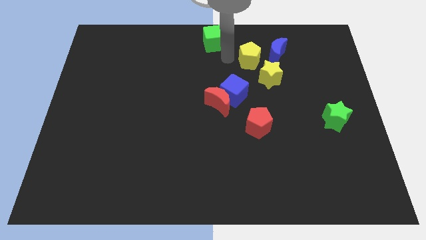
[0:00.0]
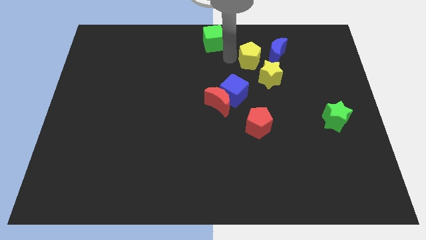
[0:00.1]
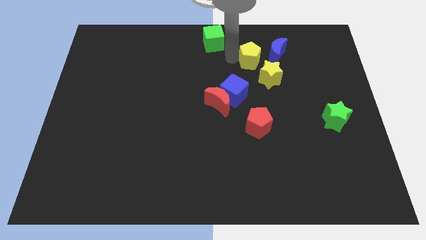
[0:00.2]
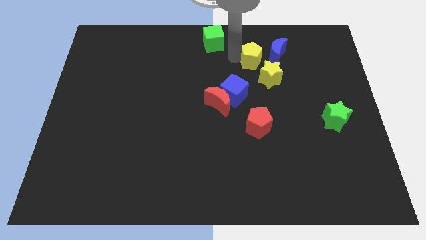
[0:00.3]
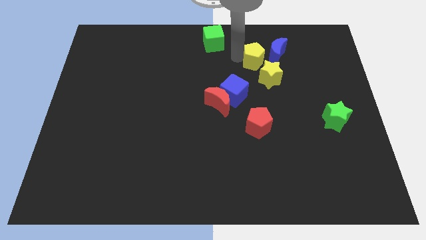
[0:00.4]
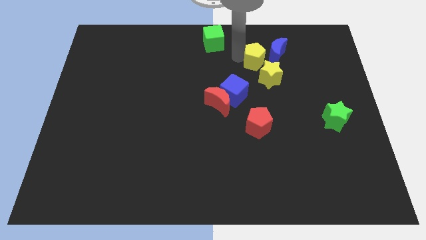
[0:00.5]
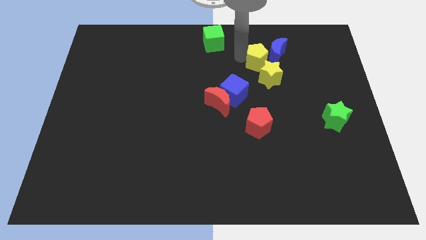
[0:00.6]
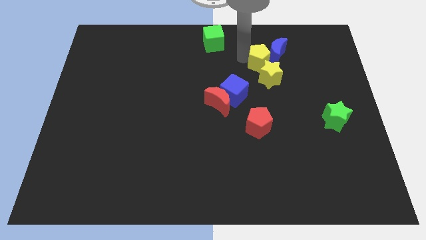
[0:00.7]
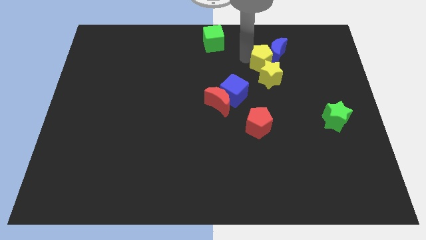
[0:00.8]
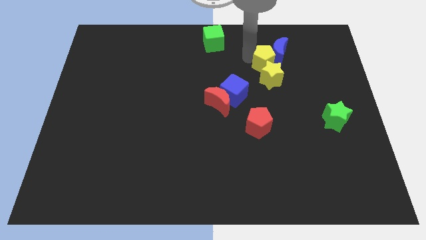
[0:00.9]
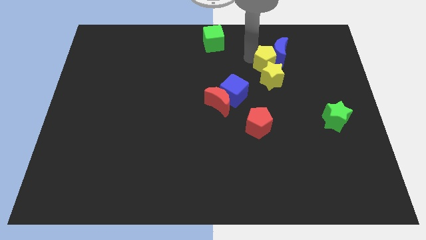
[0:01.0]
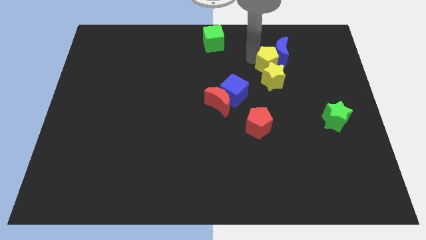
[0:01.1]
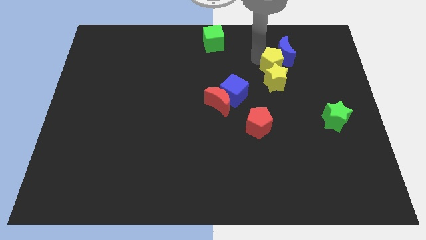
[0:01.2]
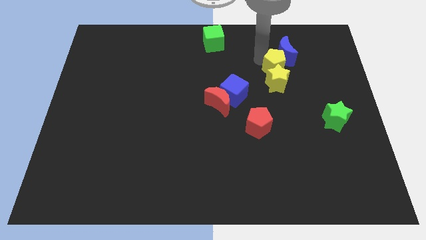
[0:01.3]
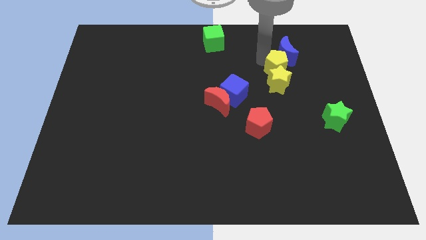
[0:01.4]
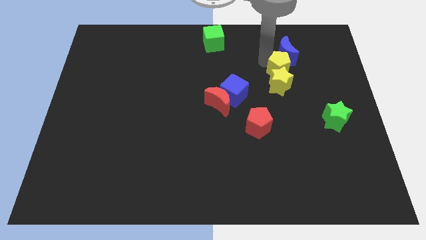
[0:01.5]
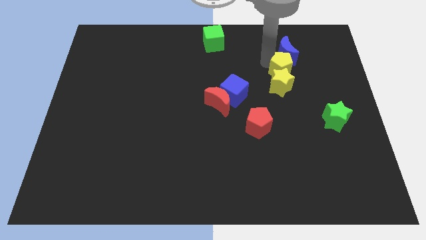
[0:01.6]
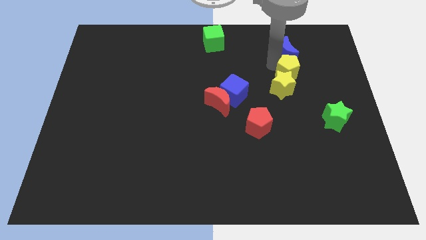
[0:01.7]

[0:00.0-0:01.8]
place the yellow pentagon diagonally in between blue moon and yellow star

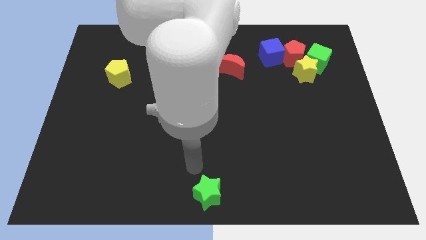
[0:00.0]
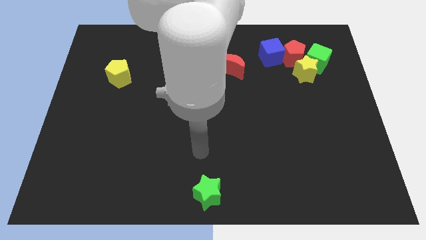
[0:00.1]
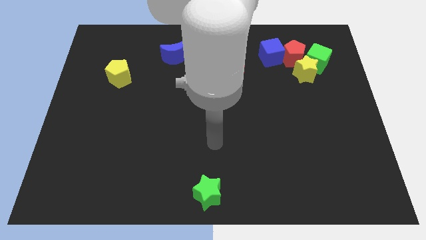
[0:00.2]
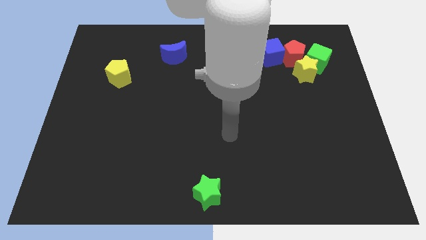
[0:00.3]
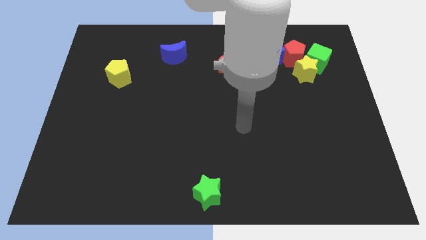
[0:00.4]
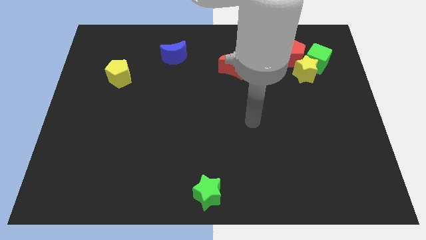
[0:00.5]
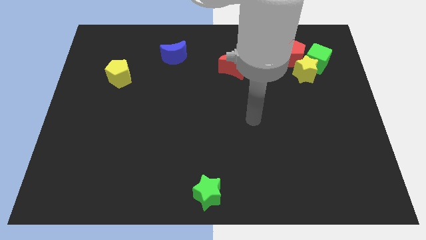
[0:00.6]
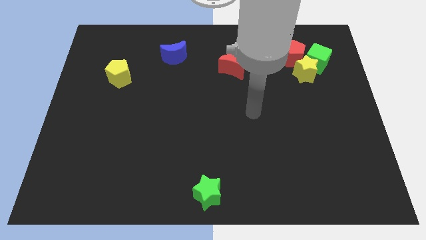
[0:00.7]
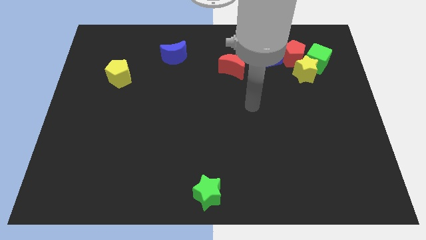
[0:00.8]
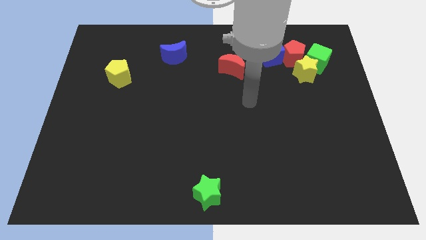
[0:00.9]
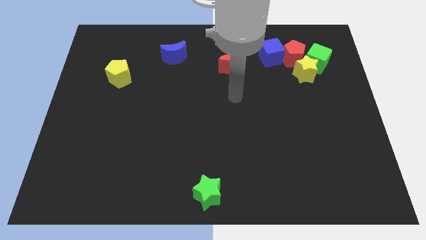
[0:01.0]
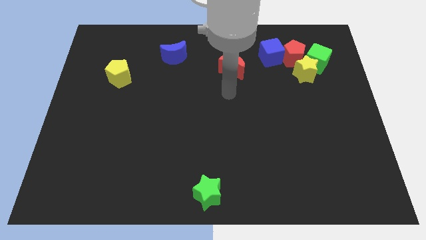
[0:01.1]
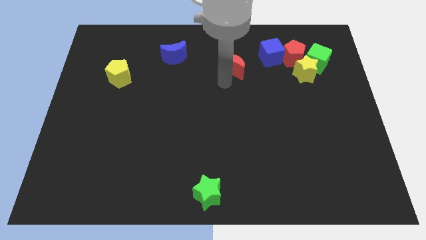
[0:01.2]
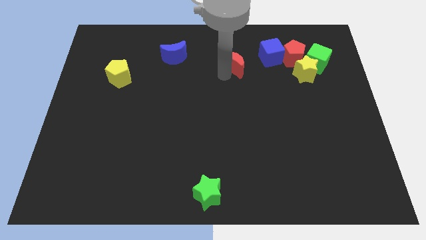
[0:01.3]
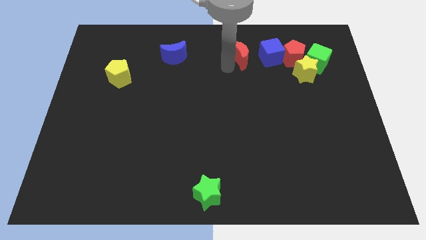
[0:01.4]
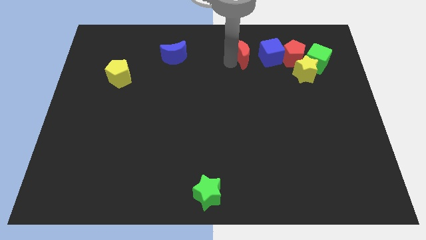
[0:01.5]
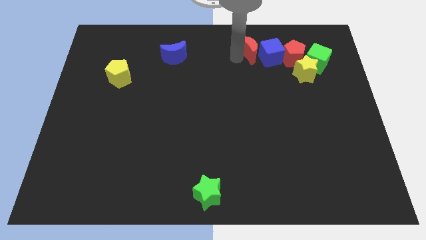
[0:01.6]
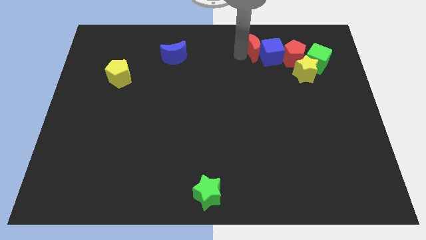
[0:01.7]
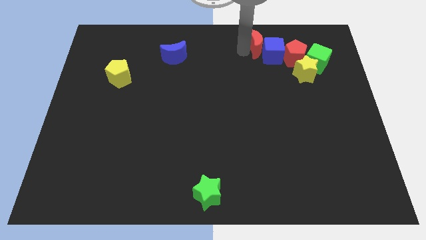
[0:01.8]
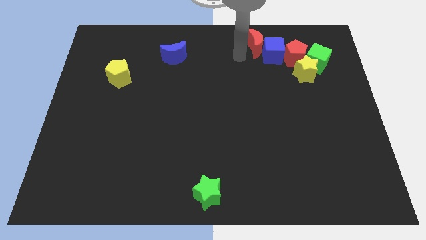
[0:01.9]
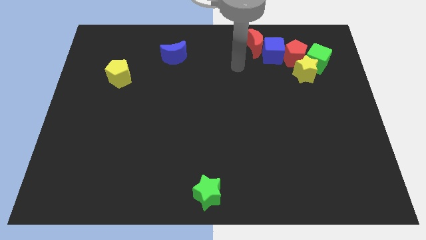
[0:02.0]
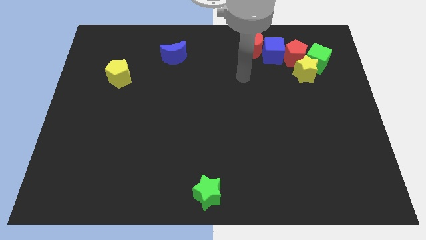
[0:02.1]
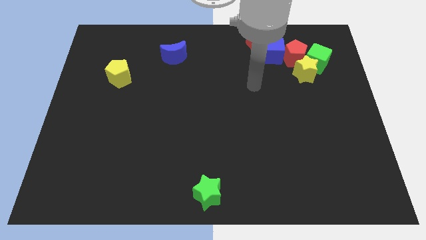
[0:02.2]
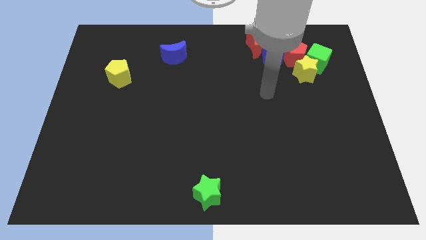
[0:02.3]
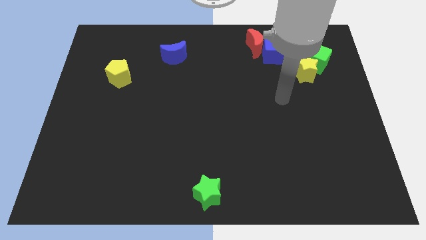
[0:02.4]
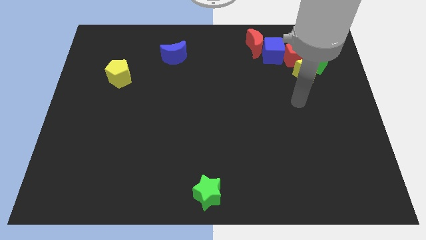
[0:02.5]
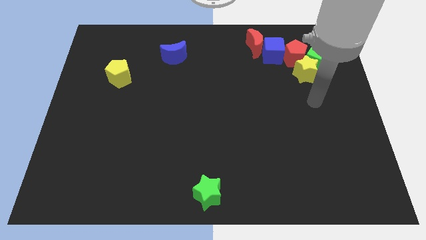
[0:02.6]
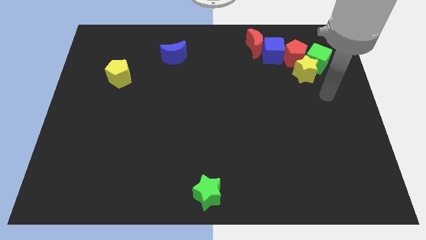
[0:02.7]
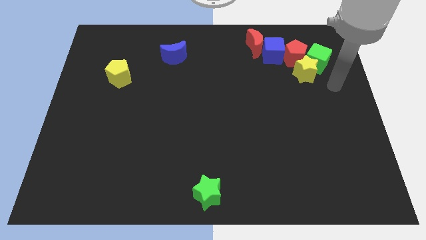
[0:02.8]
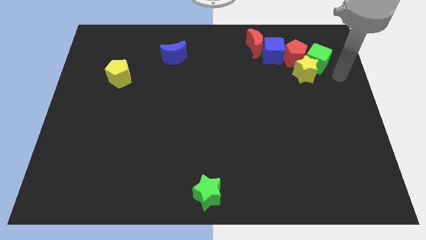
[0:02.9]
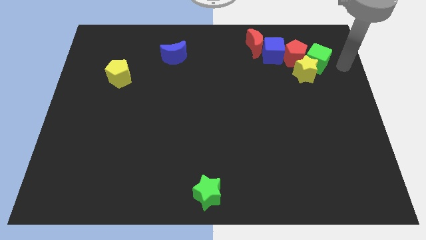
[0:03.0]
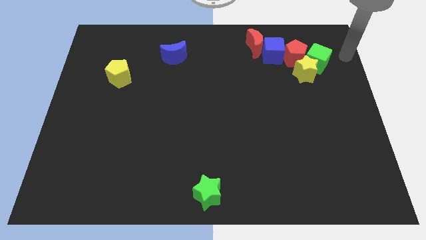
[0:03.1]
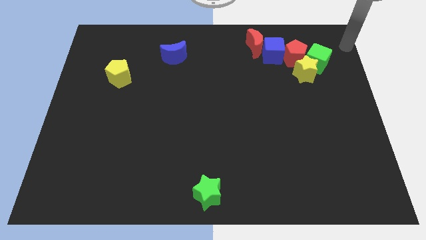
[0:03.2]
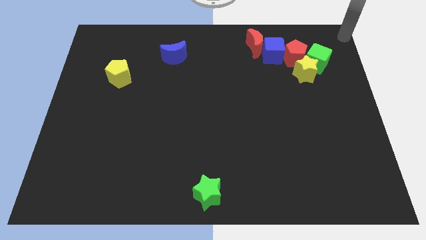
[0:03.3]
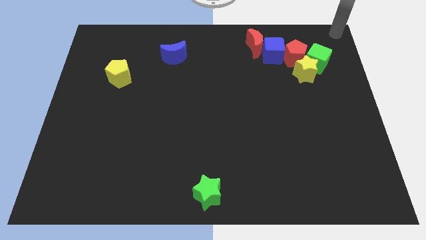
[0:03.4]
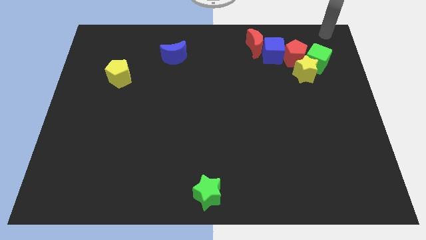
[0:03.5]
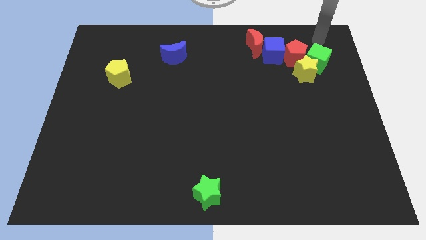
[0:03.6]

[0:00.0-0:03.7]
place the red moon left to the blue square

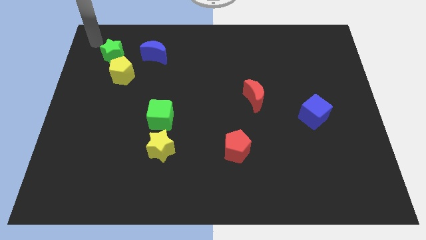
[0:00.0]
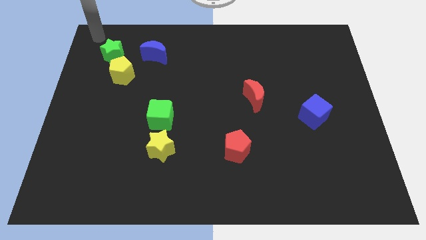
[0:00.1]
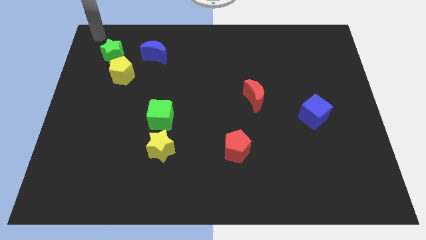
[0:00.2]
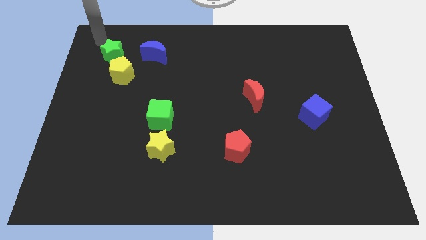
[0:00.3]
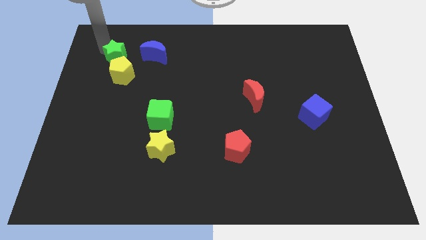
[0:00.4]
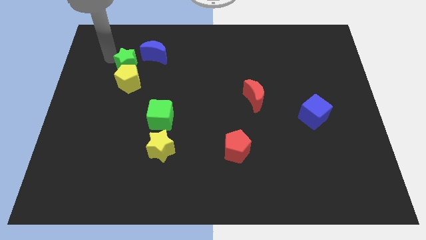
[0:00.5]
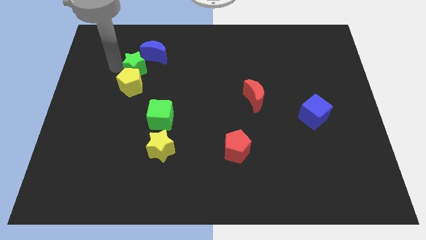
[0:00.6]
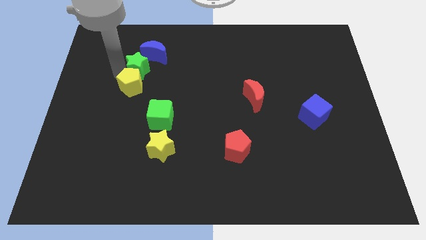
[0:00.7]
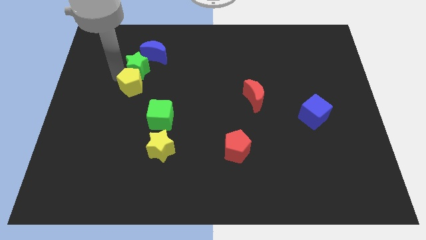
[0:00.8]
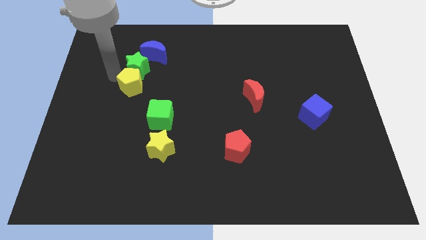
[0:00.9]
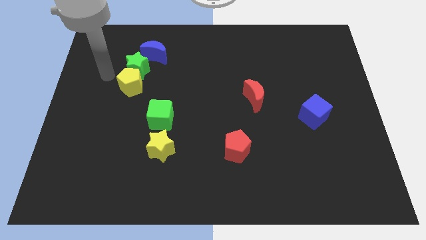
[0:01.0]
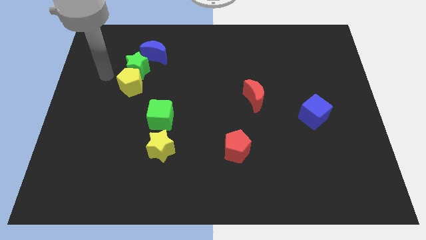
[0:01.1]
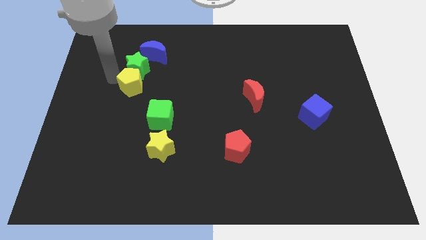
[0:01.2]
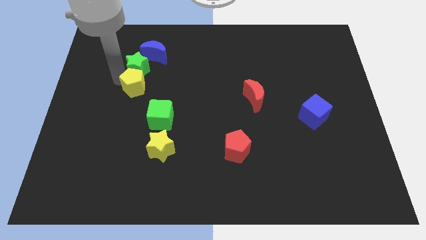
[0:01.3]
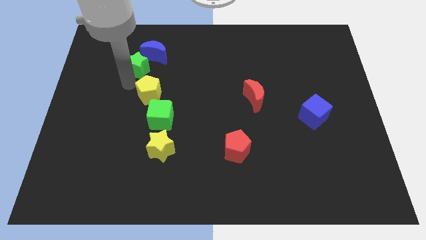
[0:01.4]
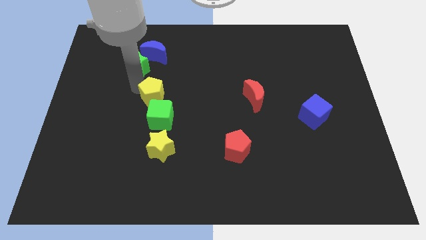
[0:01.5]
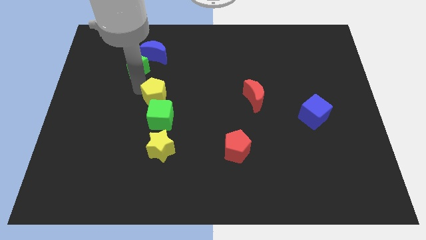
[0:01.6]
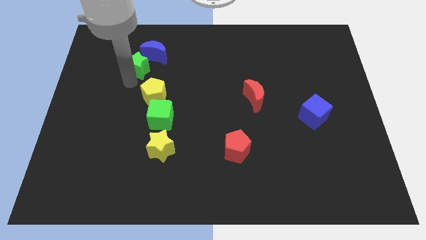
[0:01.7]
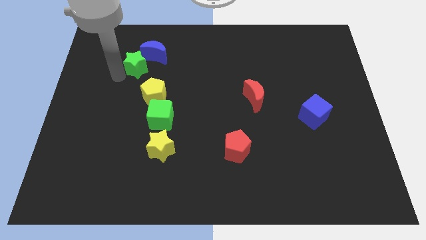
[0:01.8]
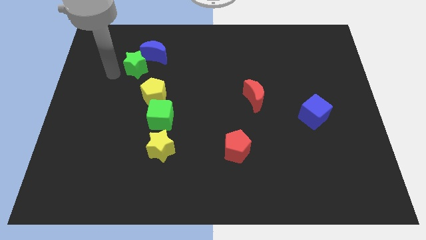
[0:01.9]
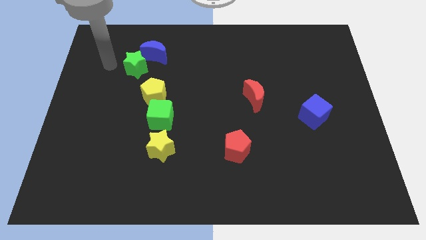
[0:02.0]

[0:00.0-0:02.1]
move the yellow pentagon to the vertical line

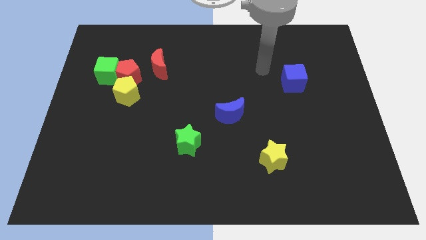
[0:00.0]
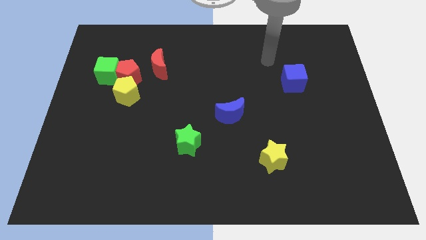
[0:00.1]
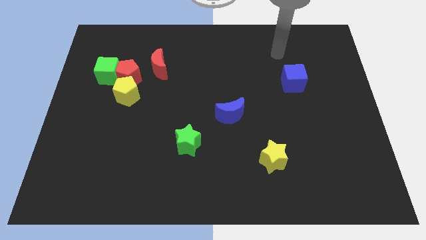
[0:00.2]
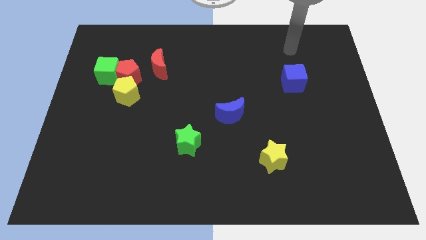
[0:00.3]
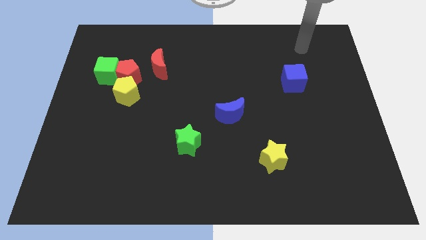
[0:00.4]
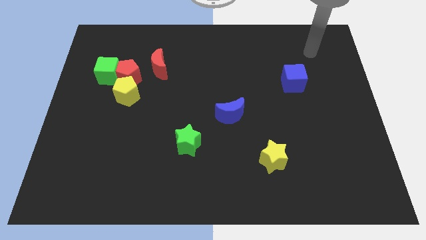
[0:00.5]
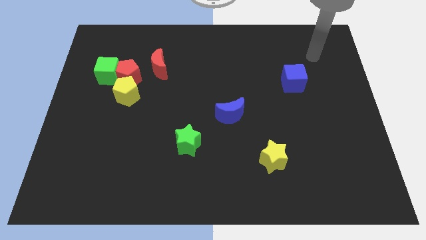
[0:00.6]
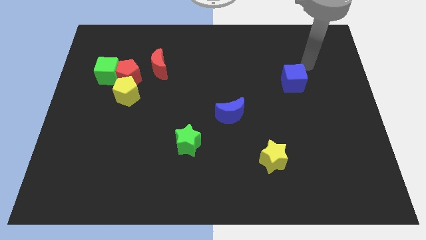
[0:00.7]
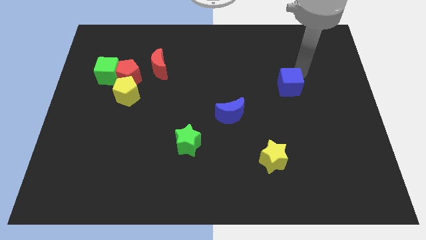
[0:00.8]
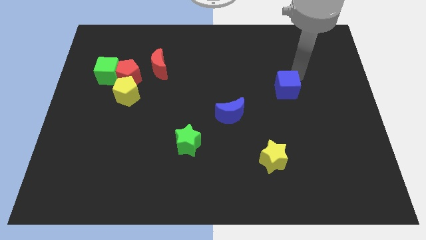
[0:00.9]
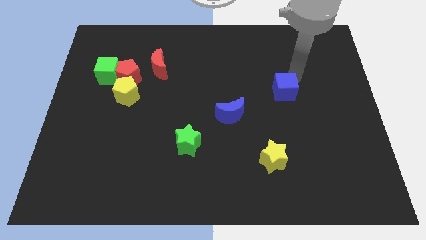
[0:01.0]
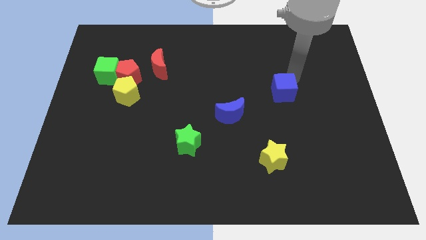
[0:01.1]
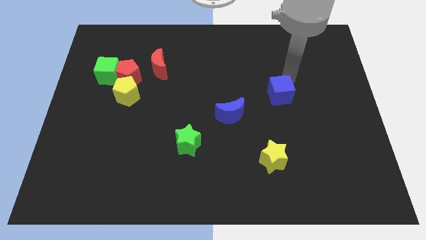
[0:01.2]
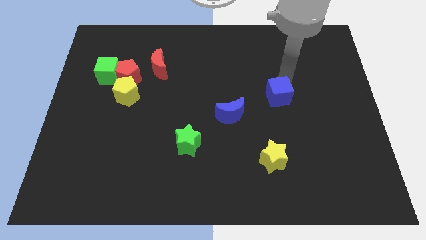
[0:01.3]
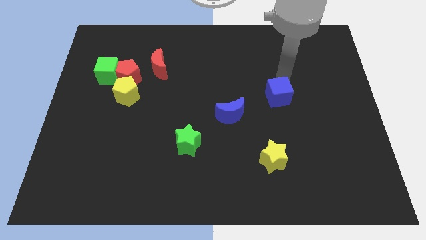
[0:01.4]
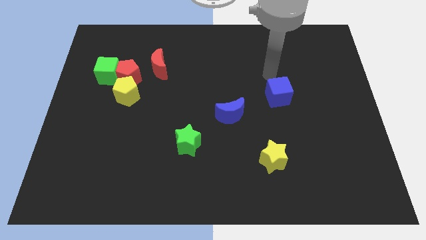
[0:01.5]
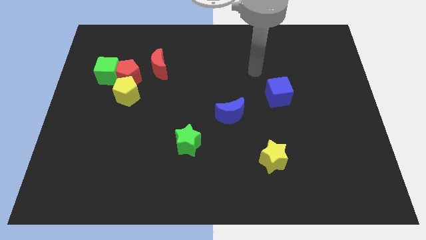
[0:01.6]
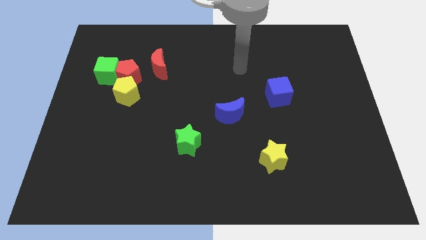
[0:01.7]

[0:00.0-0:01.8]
slide the blue cube towards the center
